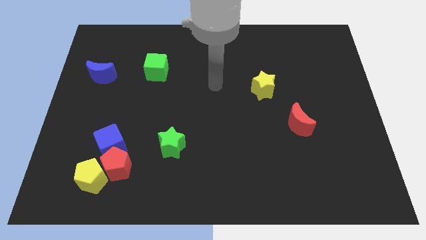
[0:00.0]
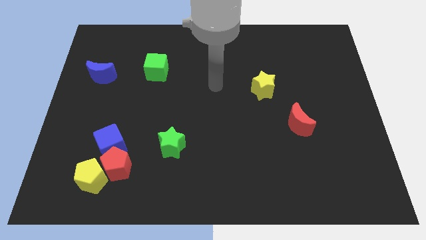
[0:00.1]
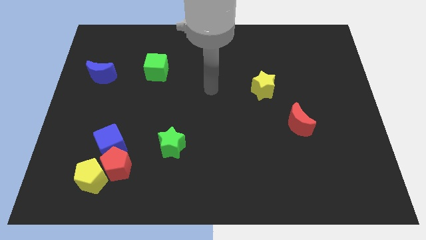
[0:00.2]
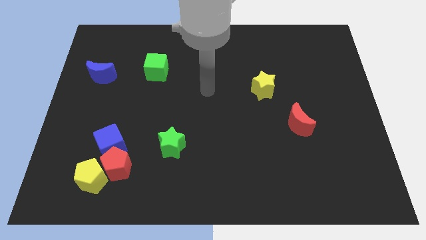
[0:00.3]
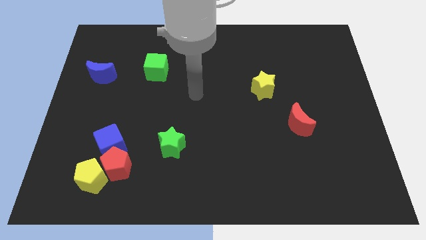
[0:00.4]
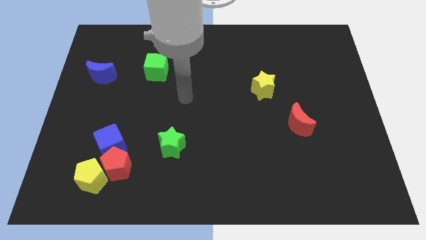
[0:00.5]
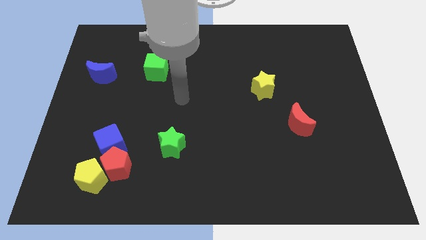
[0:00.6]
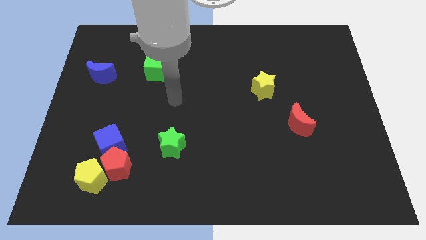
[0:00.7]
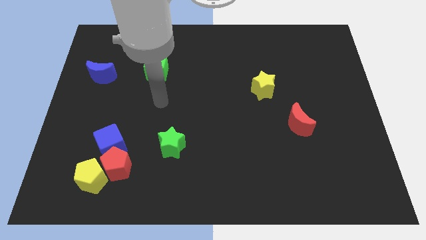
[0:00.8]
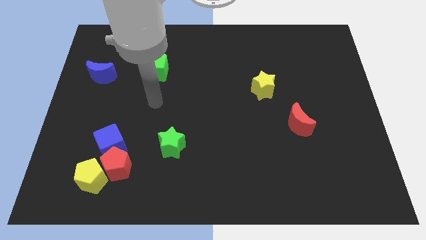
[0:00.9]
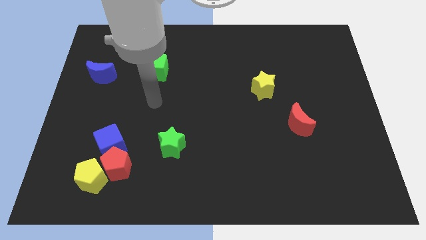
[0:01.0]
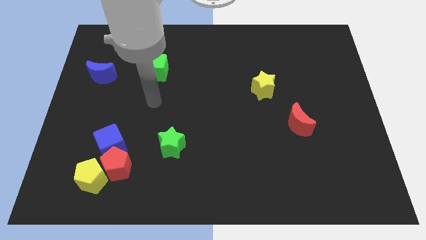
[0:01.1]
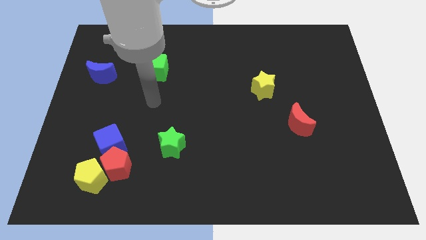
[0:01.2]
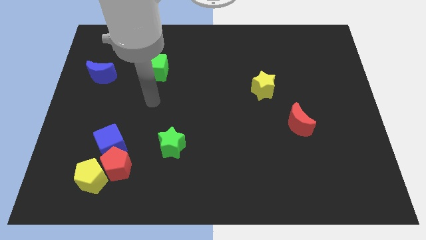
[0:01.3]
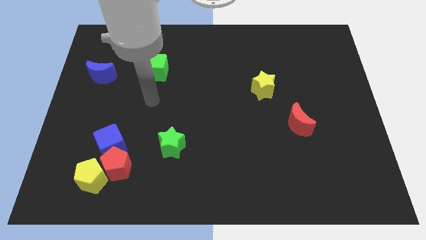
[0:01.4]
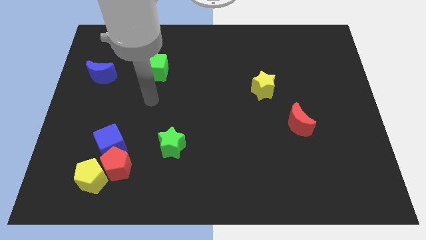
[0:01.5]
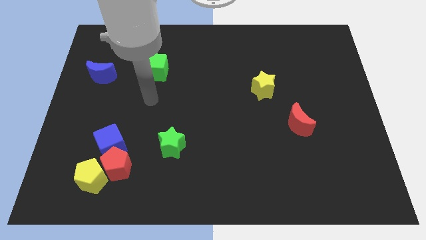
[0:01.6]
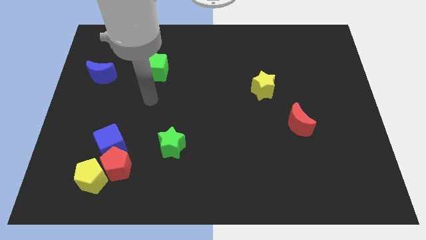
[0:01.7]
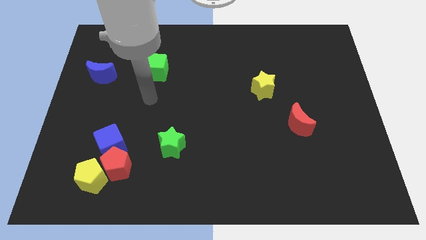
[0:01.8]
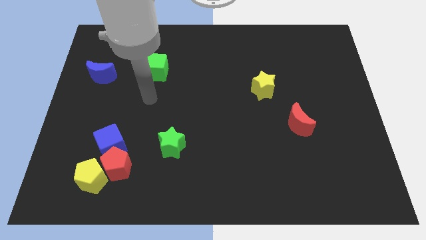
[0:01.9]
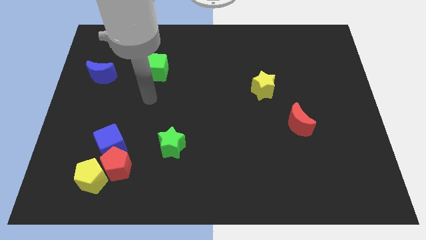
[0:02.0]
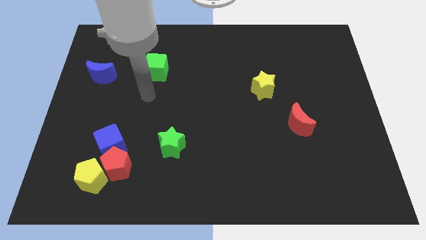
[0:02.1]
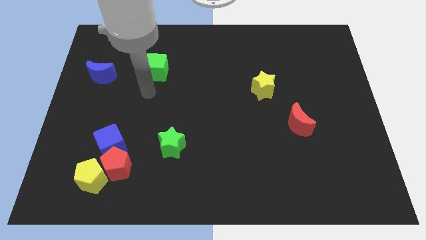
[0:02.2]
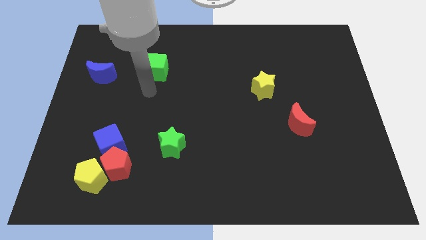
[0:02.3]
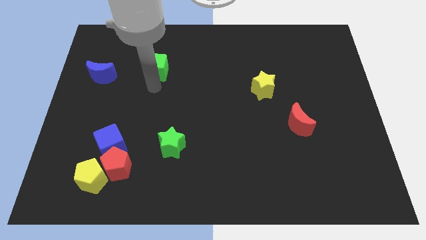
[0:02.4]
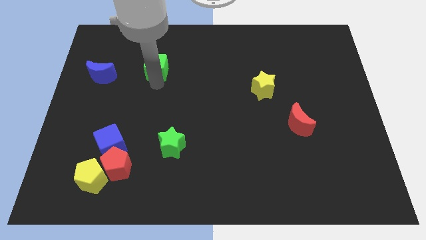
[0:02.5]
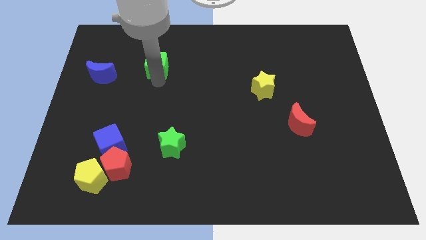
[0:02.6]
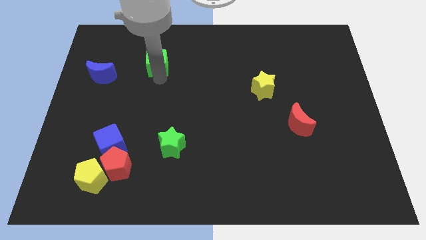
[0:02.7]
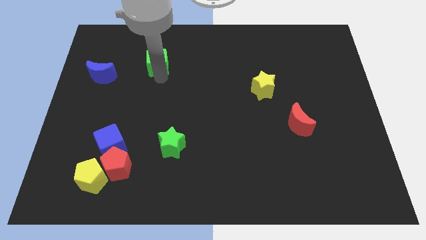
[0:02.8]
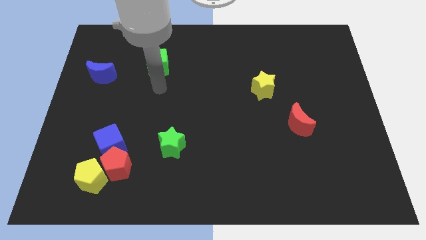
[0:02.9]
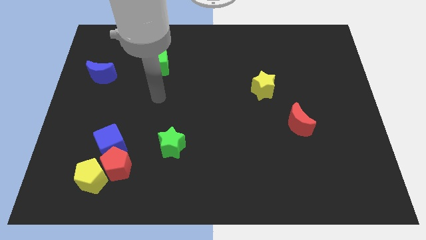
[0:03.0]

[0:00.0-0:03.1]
place your hand vertically below the green cube

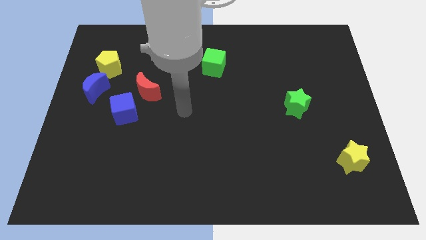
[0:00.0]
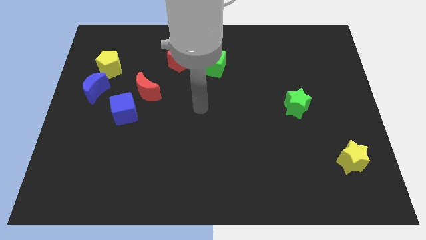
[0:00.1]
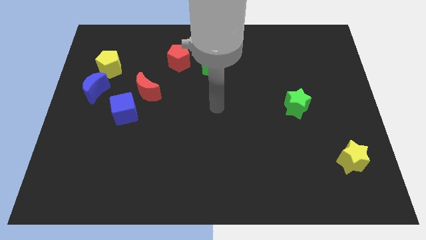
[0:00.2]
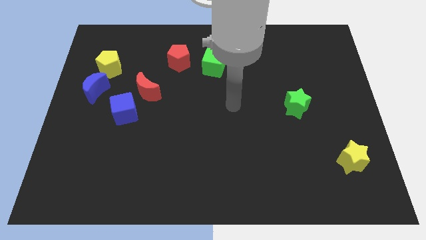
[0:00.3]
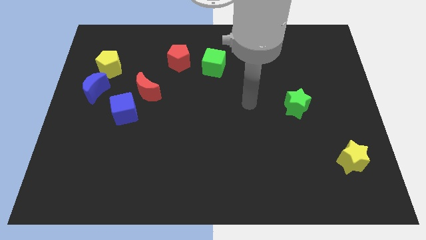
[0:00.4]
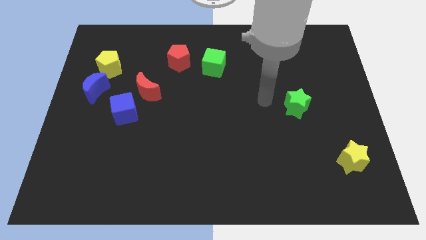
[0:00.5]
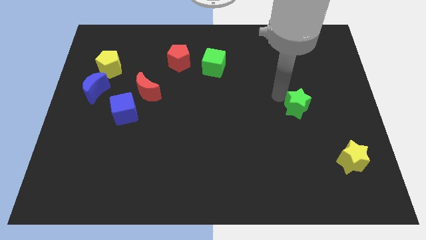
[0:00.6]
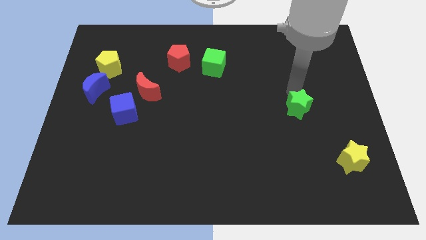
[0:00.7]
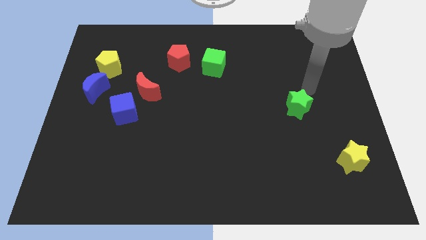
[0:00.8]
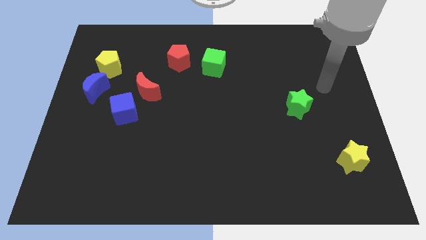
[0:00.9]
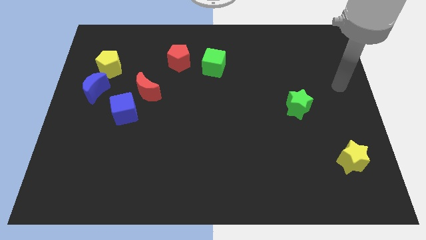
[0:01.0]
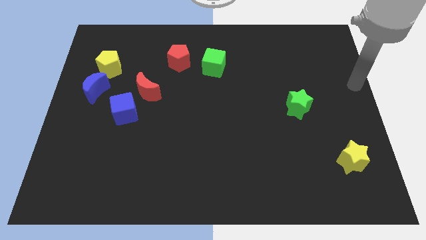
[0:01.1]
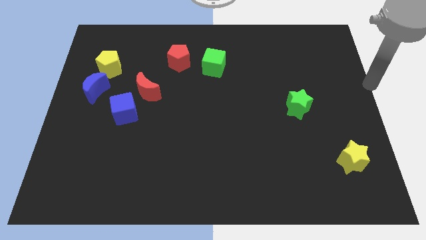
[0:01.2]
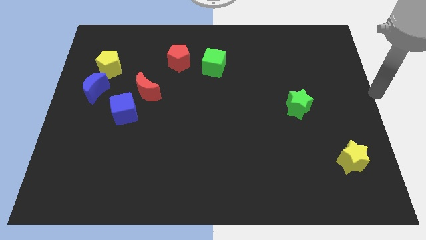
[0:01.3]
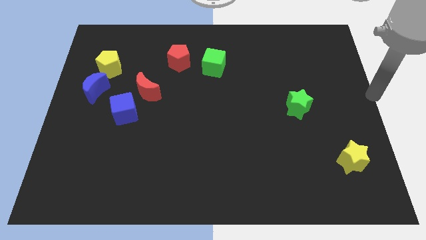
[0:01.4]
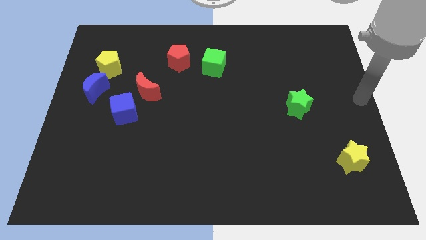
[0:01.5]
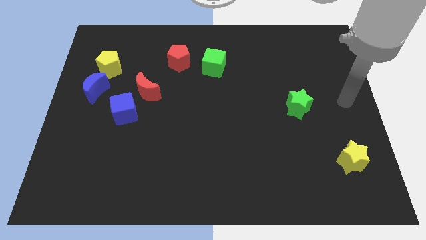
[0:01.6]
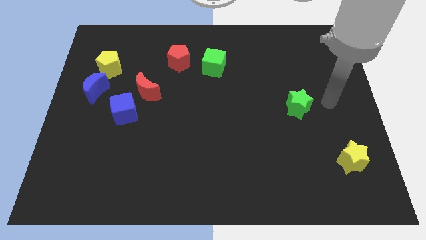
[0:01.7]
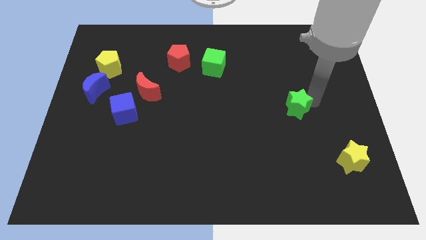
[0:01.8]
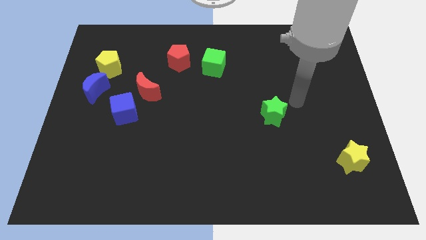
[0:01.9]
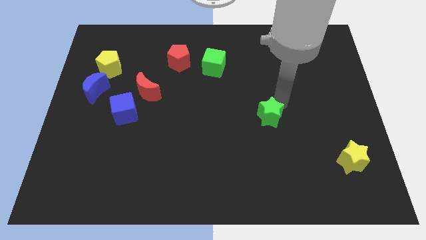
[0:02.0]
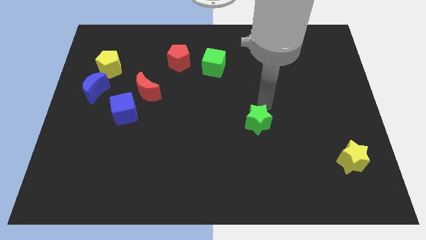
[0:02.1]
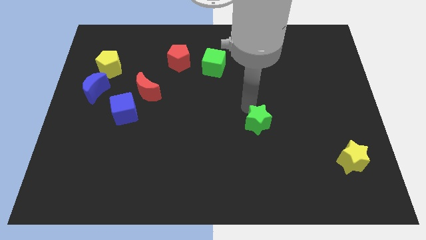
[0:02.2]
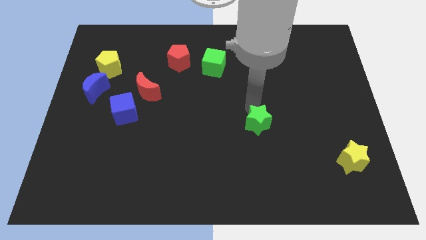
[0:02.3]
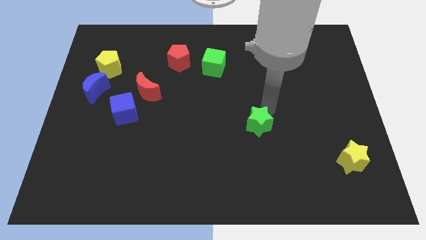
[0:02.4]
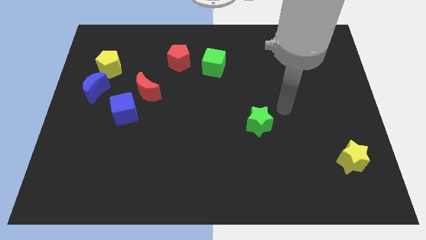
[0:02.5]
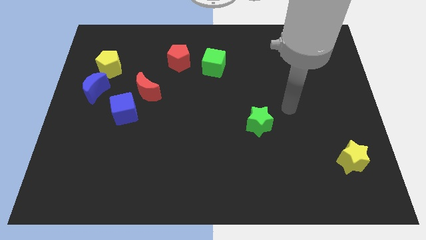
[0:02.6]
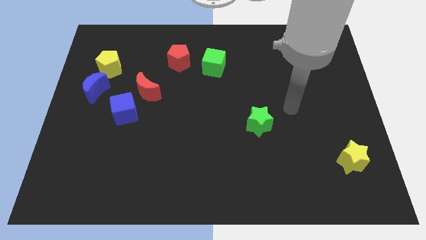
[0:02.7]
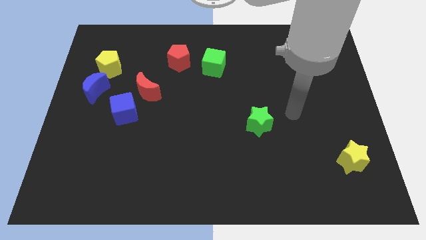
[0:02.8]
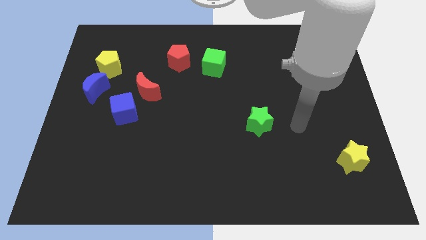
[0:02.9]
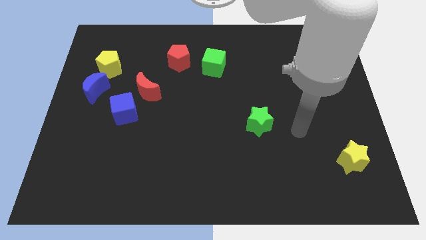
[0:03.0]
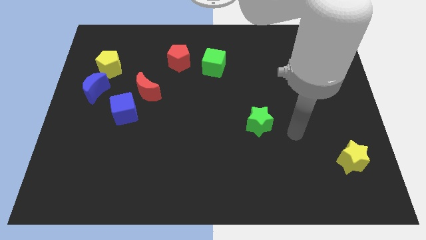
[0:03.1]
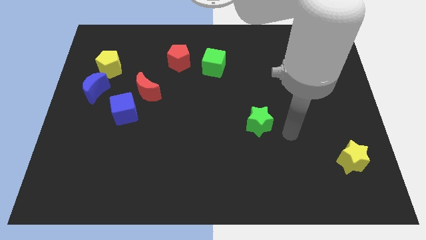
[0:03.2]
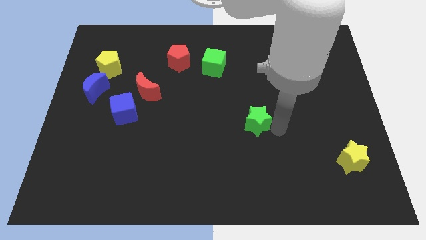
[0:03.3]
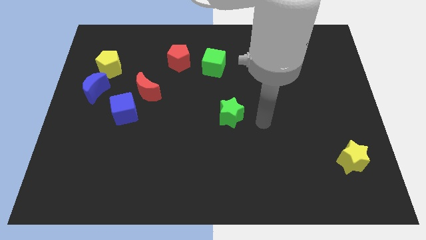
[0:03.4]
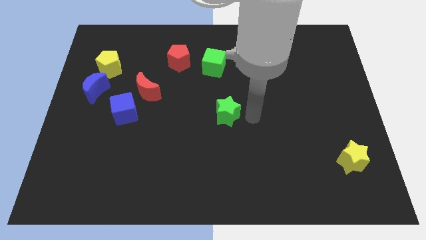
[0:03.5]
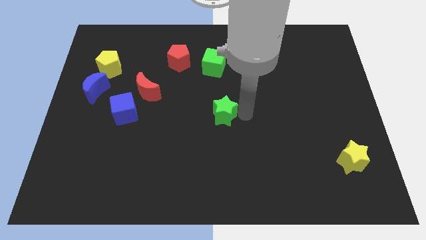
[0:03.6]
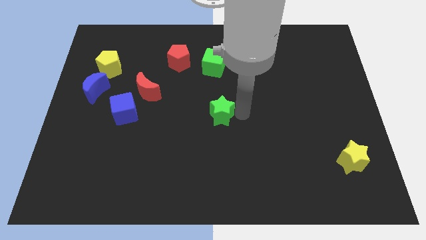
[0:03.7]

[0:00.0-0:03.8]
move the green star to the center

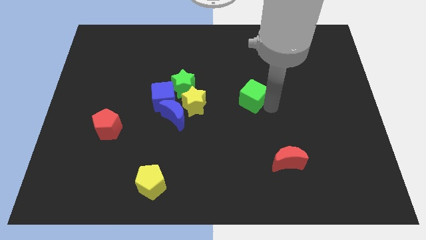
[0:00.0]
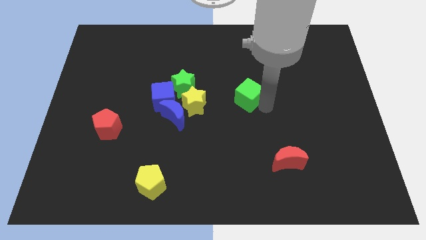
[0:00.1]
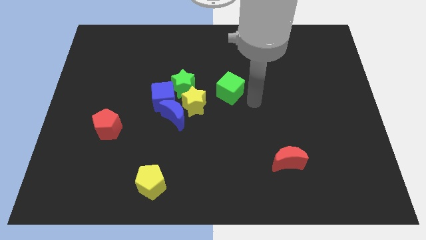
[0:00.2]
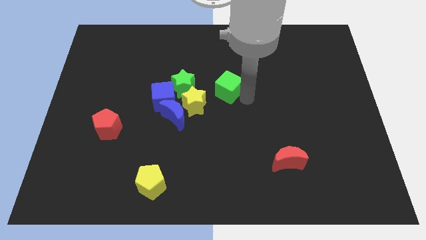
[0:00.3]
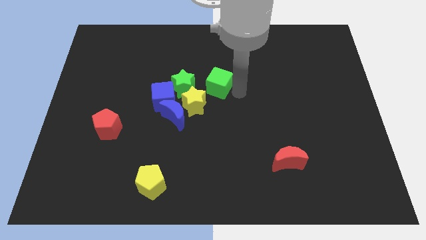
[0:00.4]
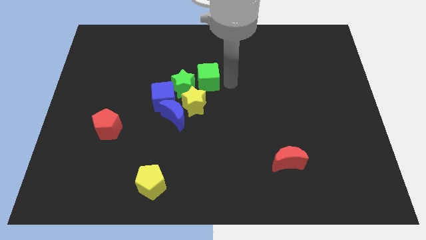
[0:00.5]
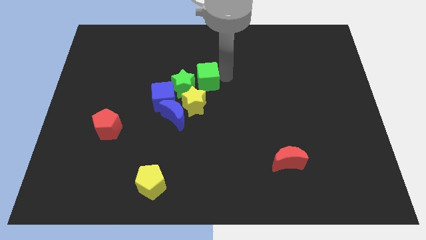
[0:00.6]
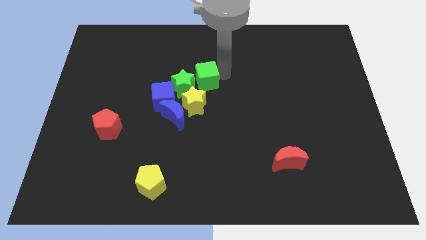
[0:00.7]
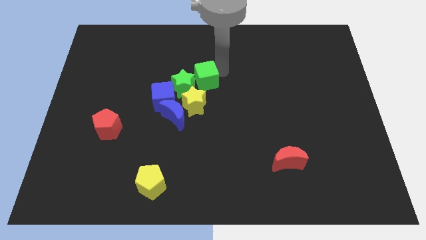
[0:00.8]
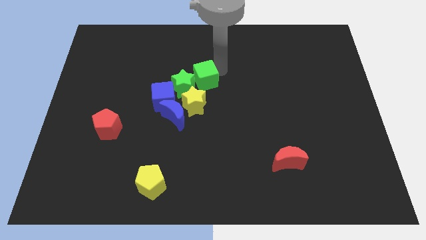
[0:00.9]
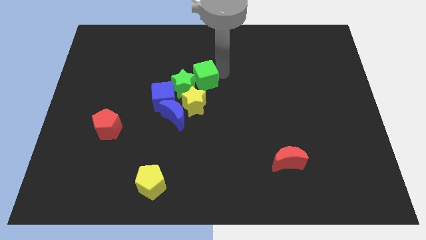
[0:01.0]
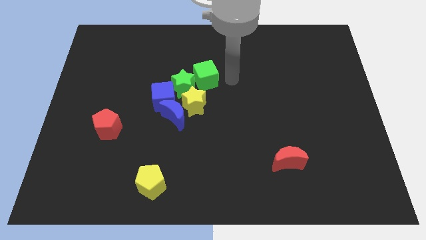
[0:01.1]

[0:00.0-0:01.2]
place the green cube into the right of green star

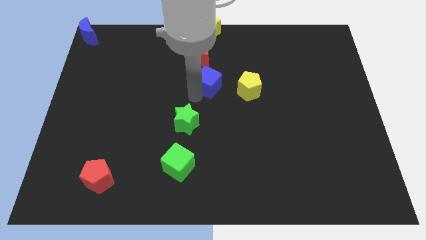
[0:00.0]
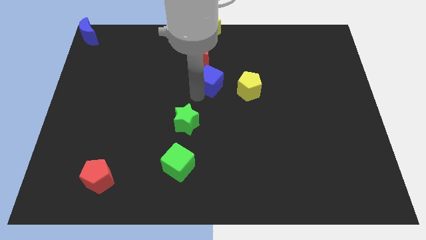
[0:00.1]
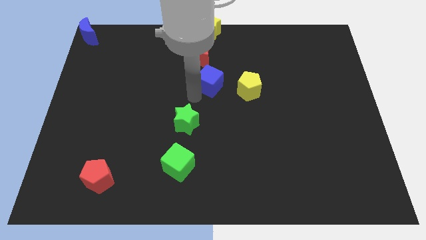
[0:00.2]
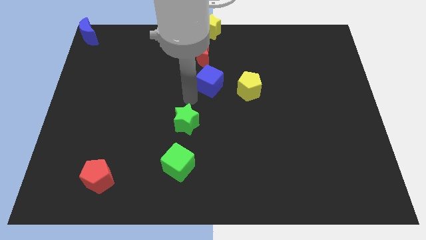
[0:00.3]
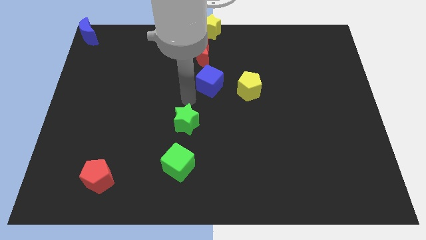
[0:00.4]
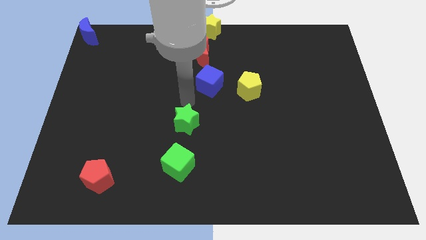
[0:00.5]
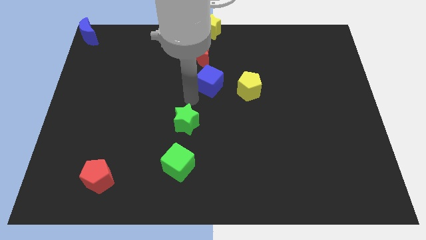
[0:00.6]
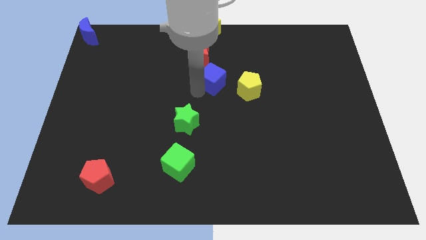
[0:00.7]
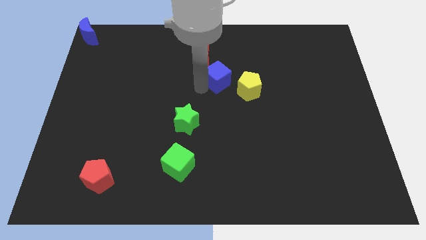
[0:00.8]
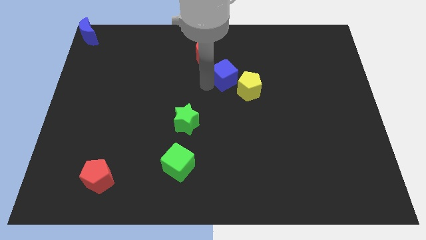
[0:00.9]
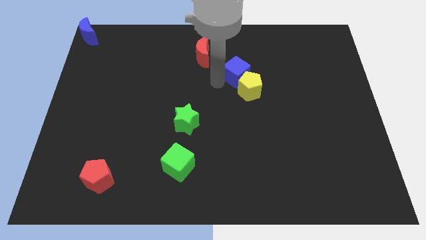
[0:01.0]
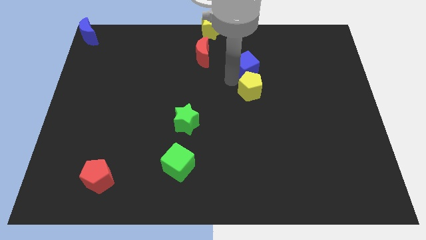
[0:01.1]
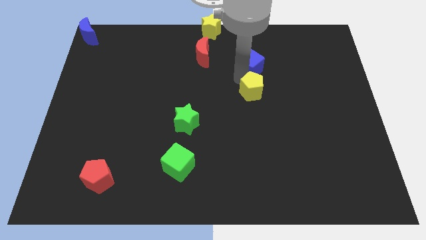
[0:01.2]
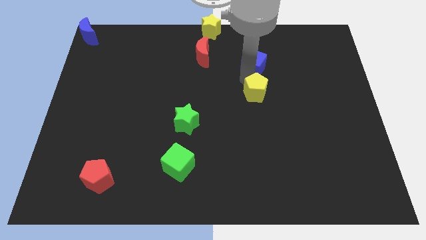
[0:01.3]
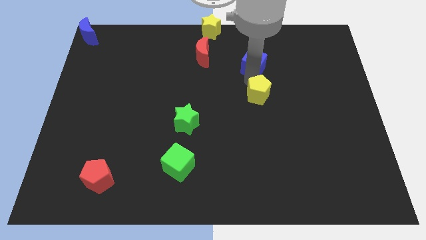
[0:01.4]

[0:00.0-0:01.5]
place the blue cube vertically above the yellow pentagon
